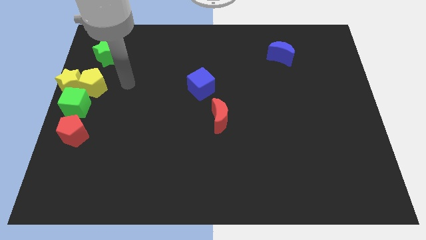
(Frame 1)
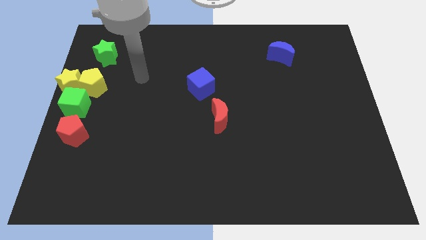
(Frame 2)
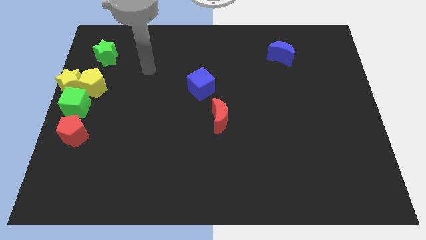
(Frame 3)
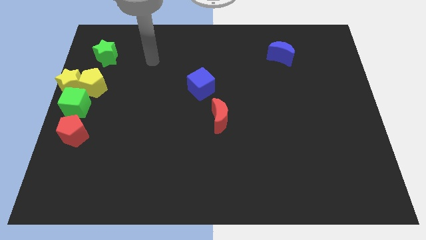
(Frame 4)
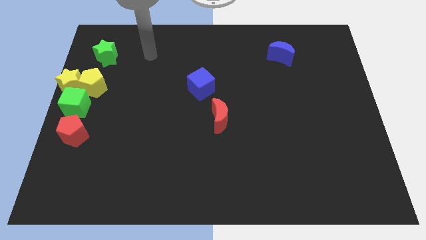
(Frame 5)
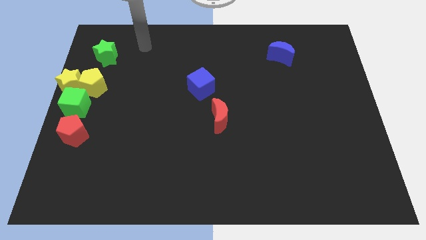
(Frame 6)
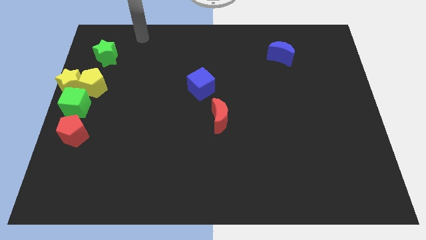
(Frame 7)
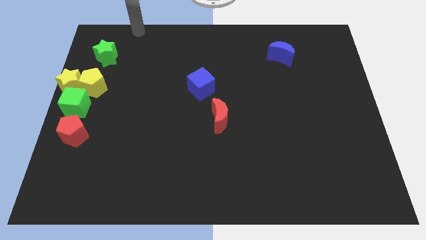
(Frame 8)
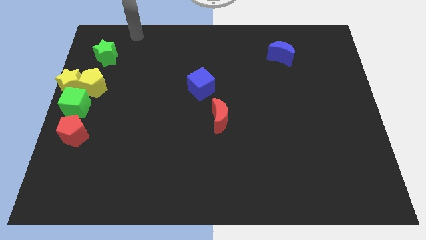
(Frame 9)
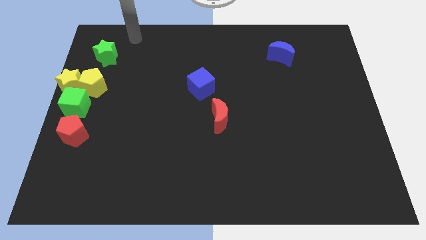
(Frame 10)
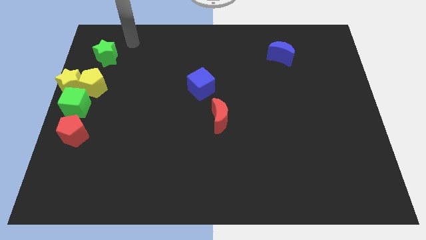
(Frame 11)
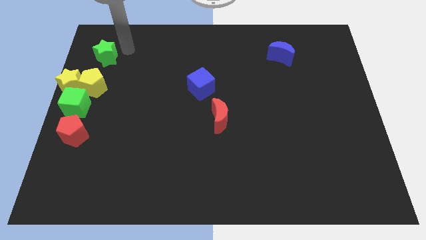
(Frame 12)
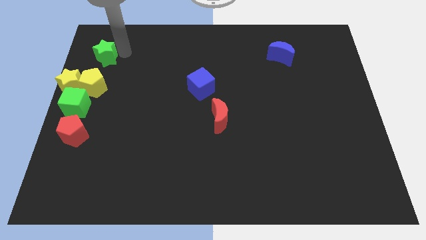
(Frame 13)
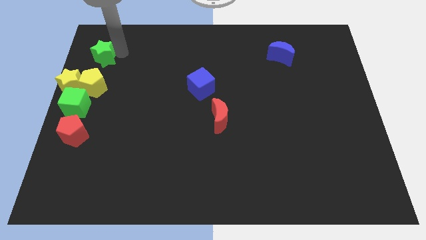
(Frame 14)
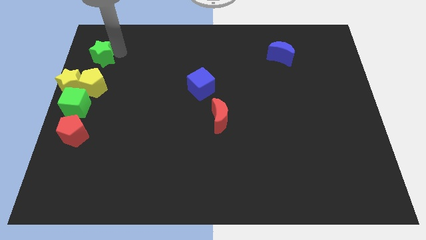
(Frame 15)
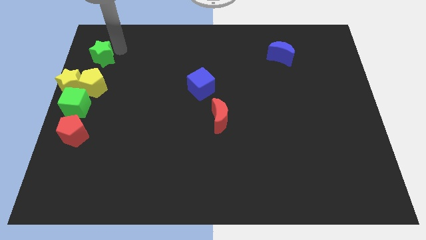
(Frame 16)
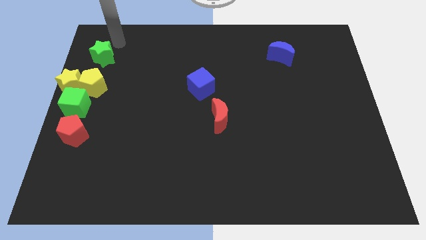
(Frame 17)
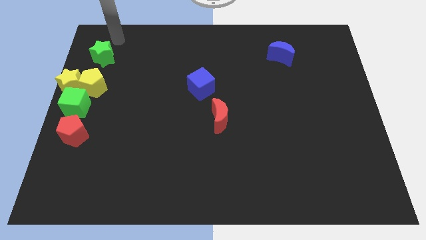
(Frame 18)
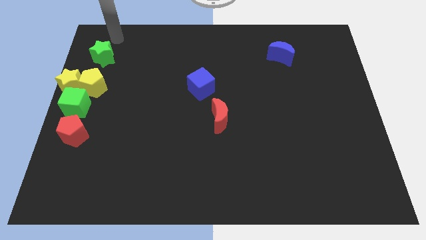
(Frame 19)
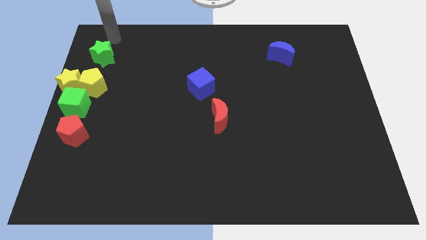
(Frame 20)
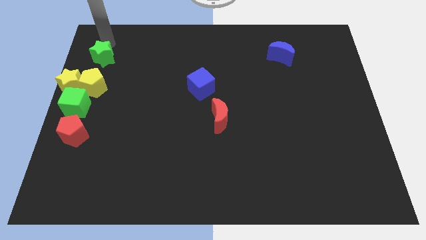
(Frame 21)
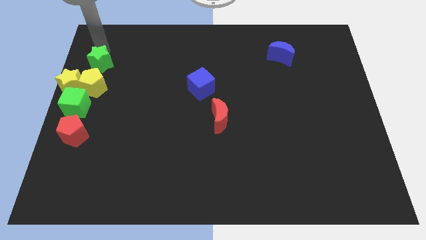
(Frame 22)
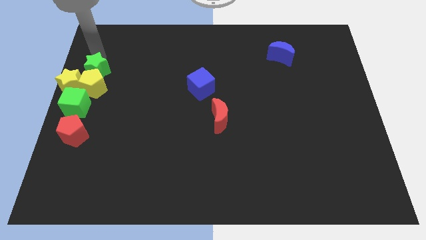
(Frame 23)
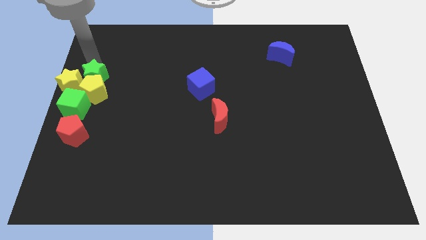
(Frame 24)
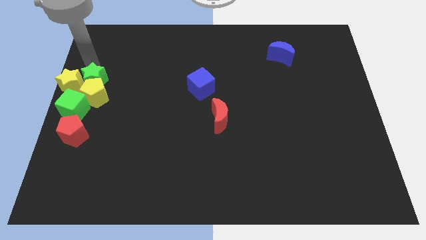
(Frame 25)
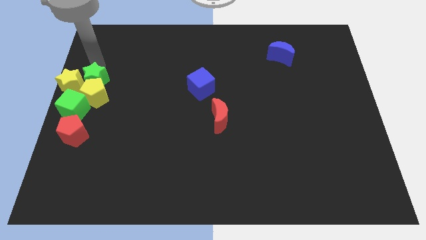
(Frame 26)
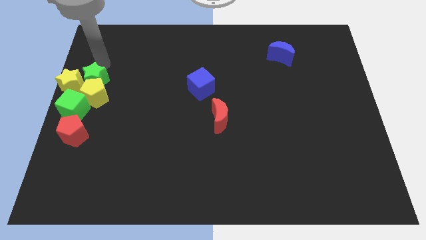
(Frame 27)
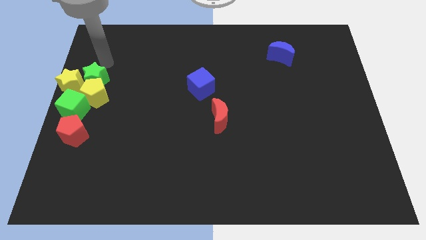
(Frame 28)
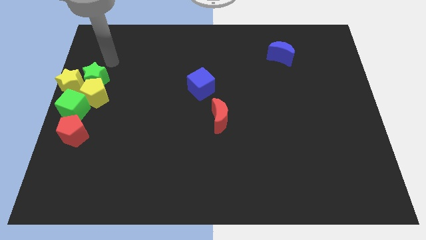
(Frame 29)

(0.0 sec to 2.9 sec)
push green star into group of blocks

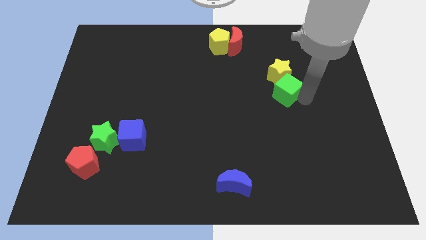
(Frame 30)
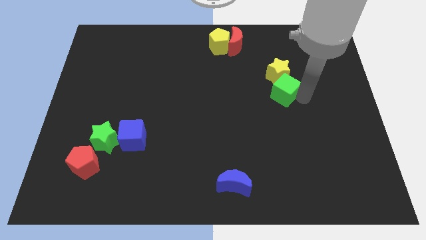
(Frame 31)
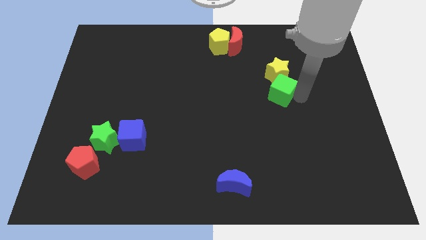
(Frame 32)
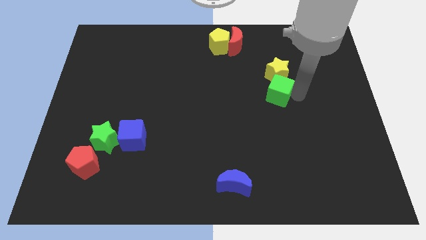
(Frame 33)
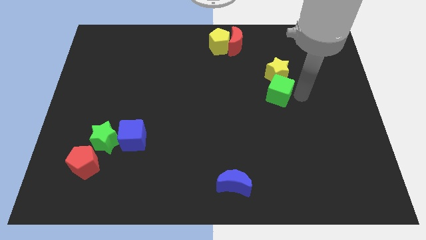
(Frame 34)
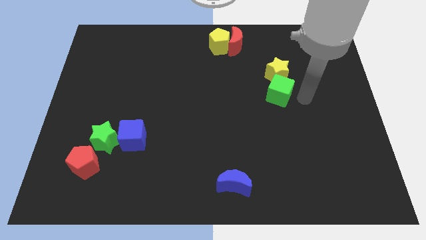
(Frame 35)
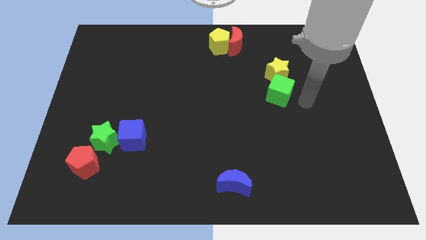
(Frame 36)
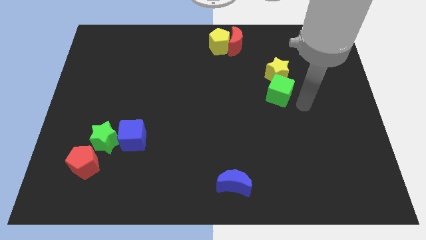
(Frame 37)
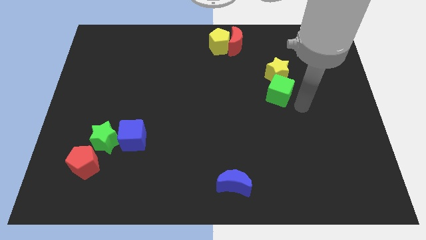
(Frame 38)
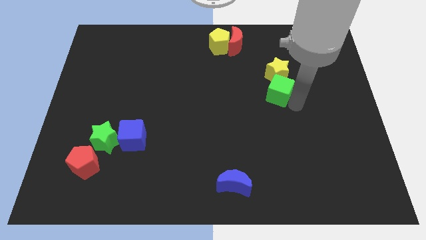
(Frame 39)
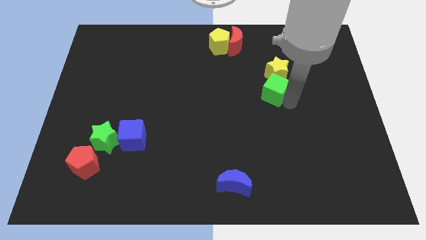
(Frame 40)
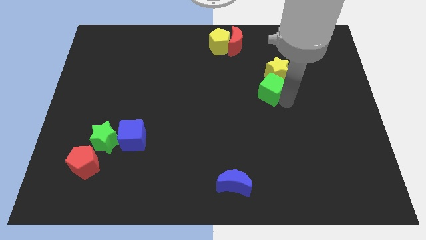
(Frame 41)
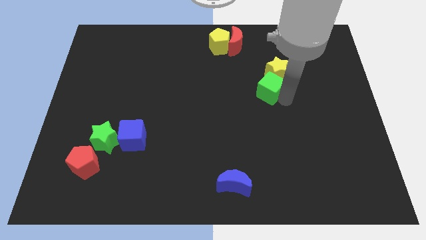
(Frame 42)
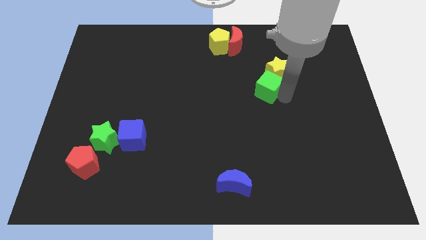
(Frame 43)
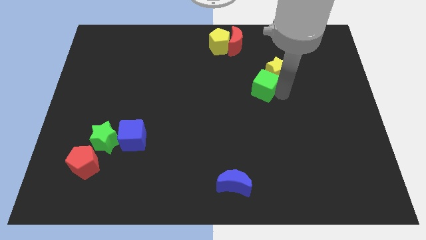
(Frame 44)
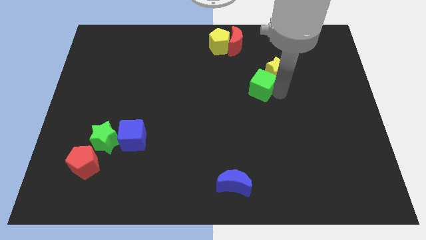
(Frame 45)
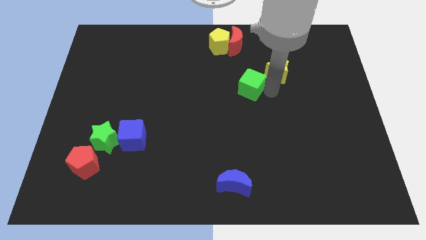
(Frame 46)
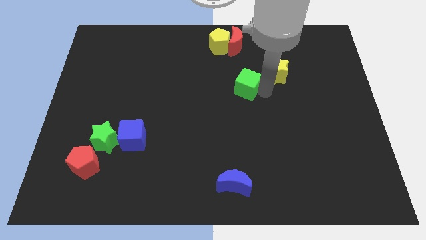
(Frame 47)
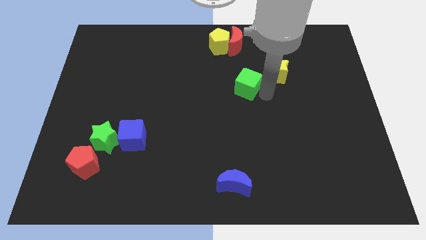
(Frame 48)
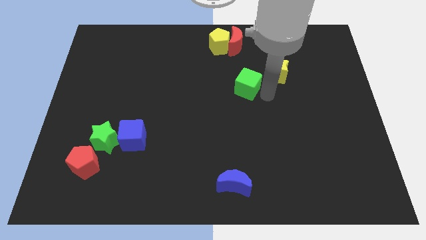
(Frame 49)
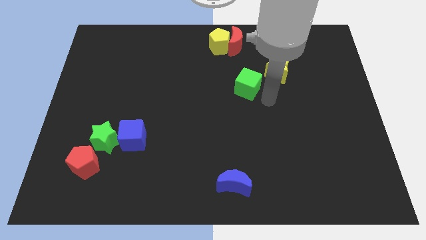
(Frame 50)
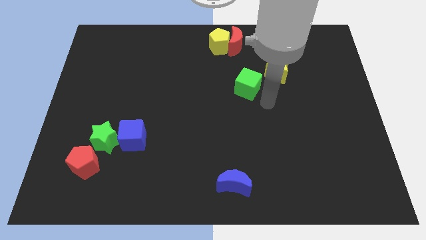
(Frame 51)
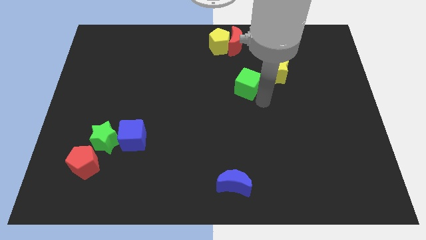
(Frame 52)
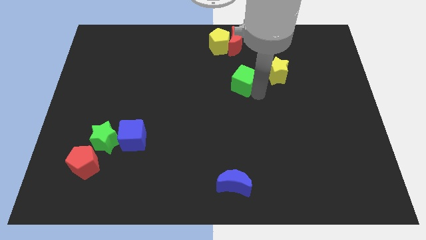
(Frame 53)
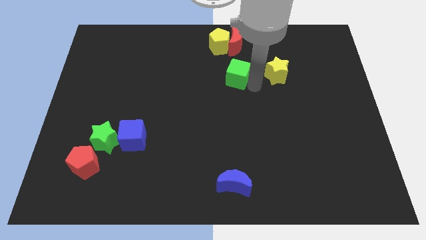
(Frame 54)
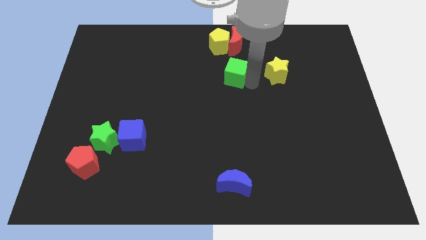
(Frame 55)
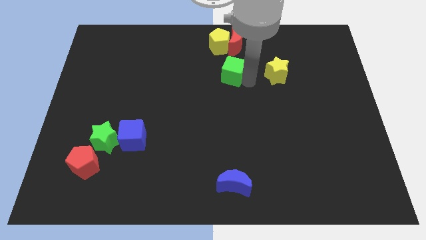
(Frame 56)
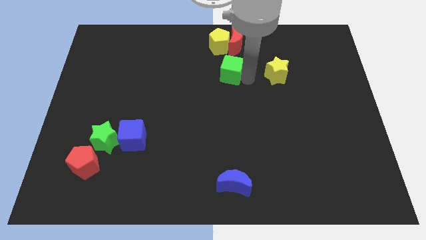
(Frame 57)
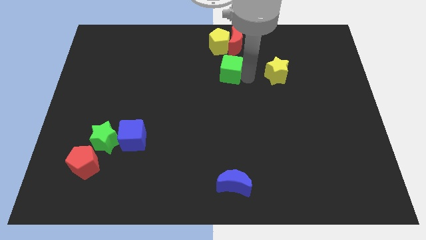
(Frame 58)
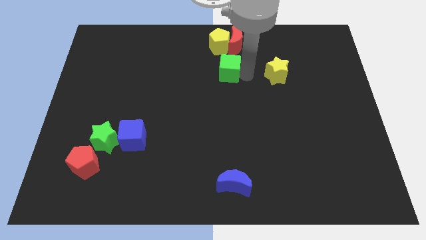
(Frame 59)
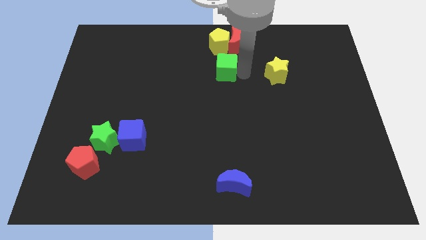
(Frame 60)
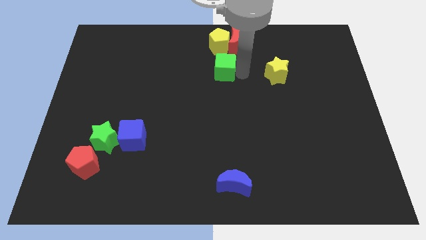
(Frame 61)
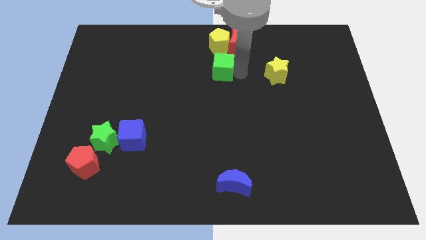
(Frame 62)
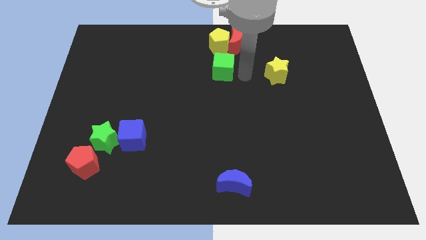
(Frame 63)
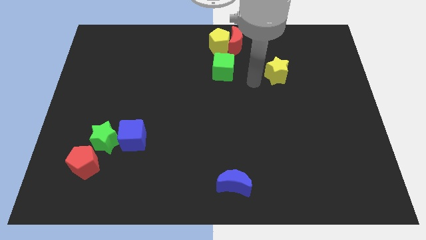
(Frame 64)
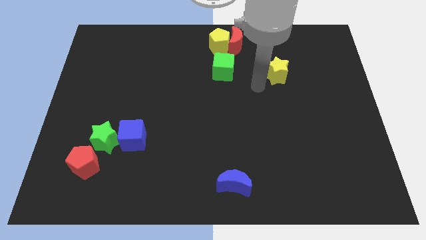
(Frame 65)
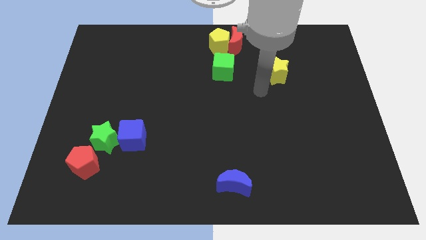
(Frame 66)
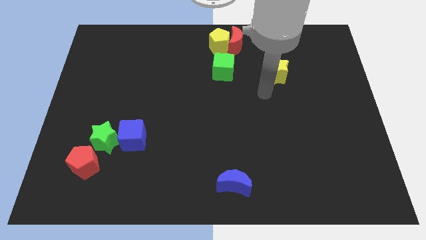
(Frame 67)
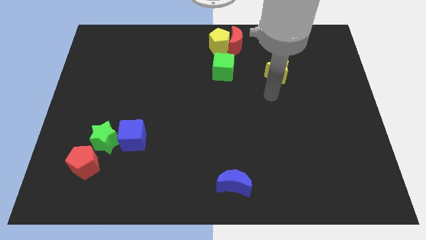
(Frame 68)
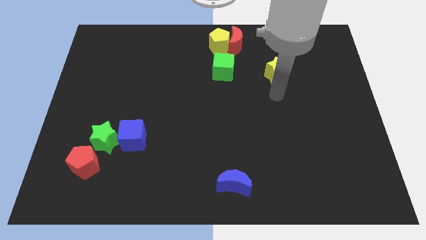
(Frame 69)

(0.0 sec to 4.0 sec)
place the green cube below to yellow pentagon

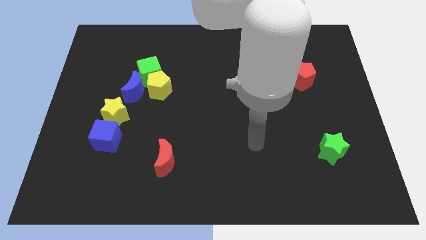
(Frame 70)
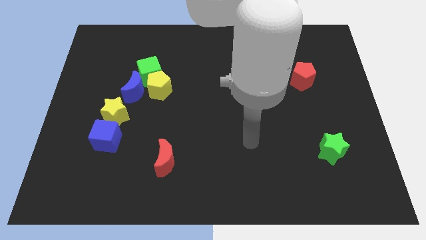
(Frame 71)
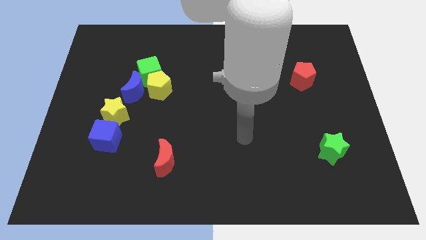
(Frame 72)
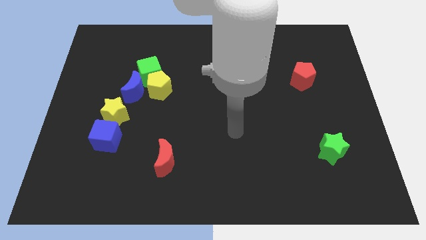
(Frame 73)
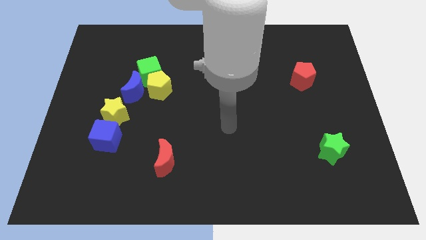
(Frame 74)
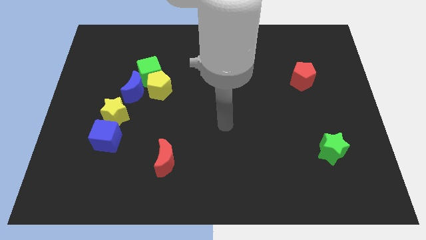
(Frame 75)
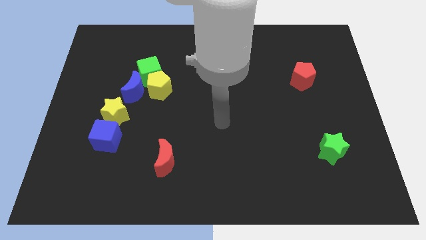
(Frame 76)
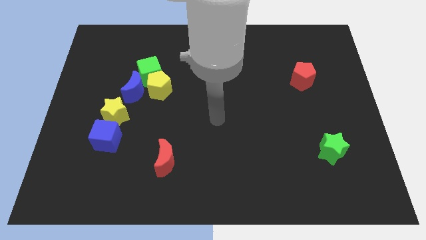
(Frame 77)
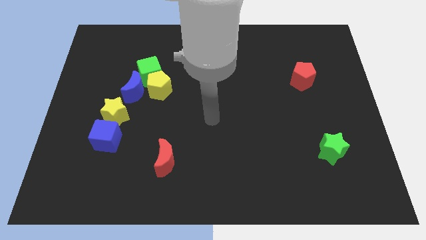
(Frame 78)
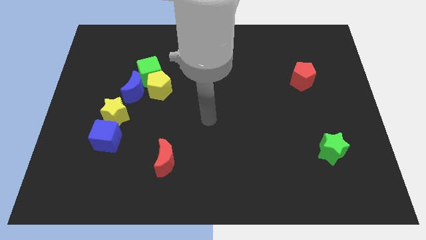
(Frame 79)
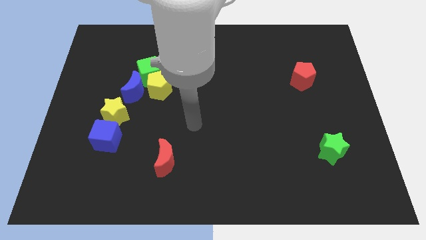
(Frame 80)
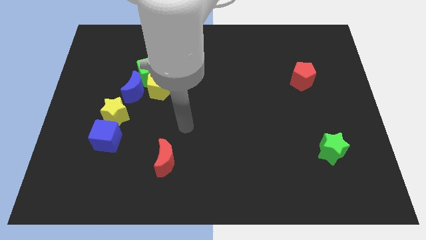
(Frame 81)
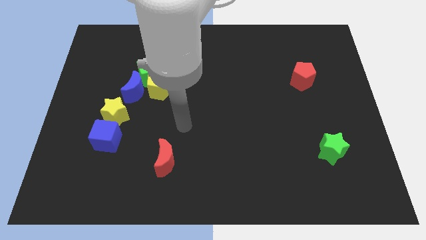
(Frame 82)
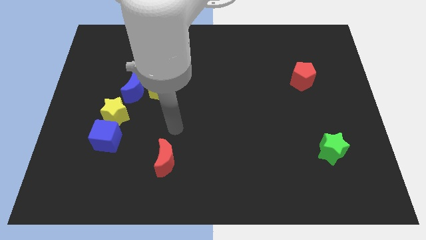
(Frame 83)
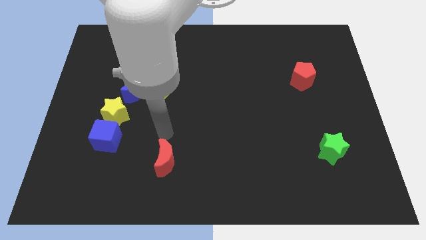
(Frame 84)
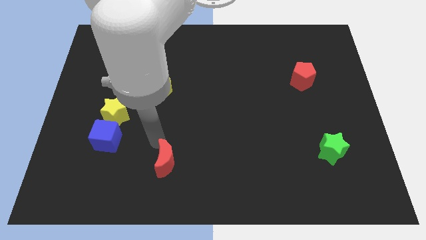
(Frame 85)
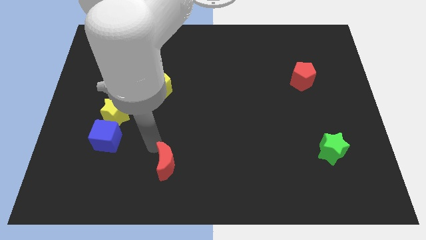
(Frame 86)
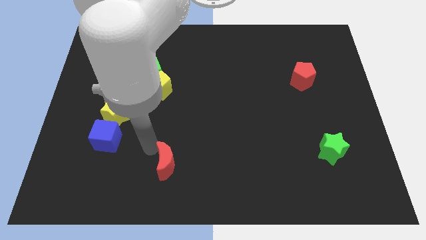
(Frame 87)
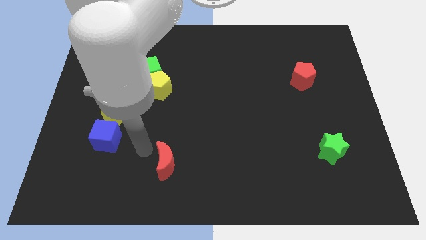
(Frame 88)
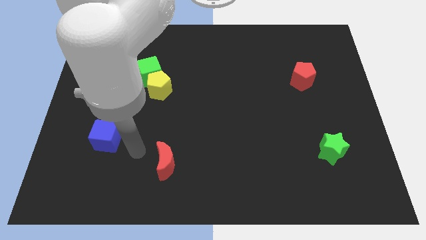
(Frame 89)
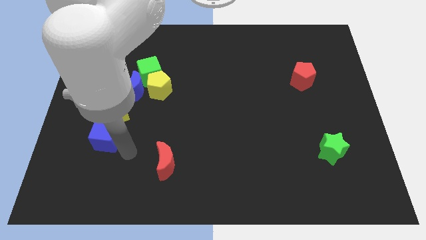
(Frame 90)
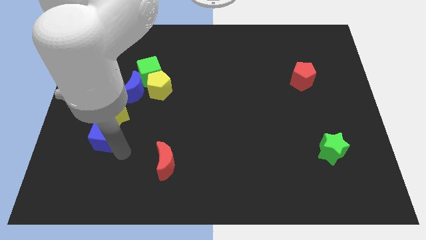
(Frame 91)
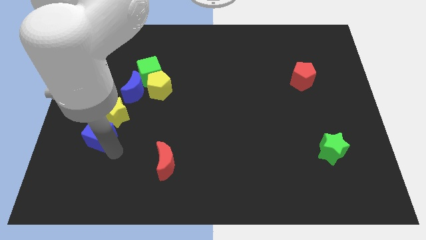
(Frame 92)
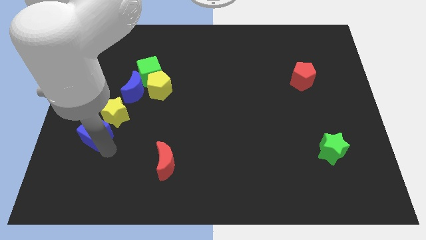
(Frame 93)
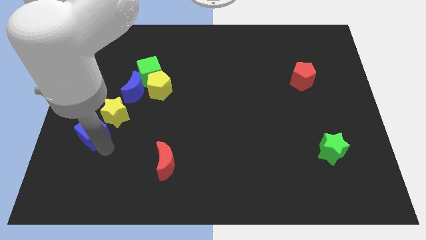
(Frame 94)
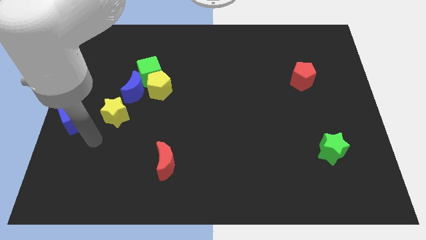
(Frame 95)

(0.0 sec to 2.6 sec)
slightly move the blue cube towards the left center of the board
